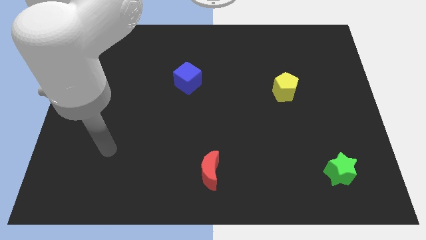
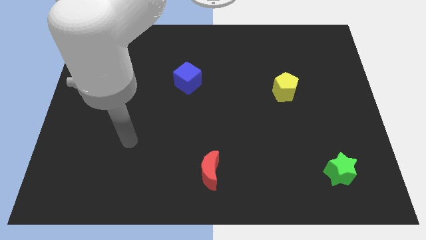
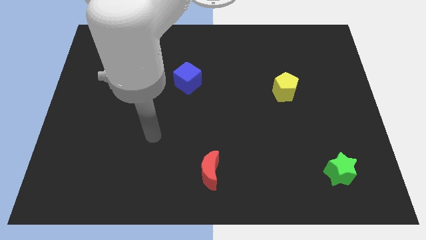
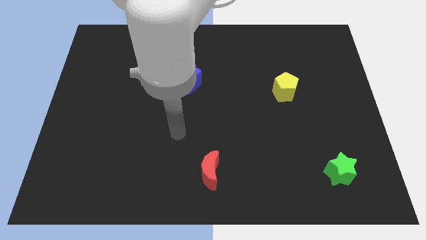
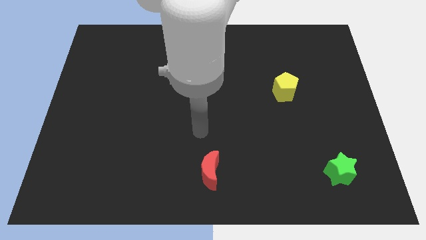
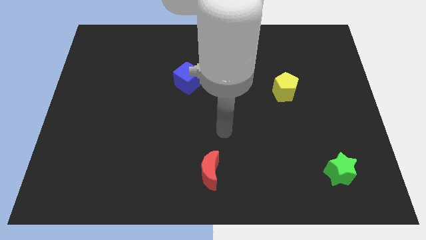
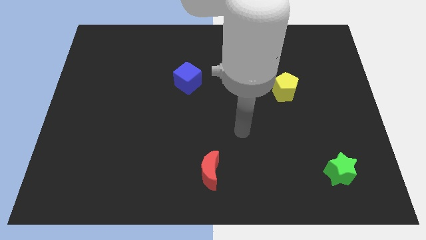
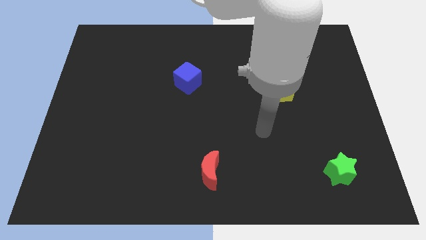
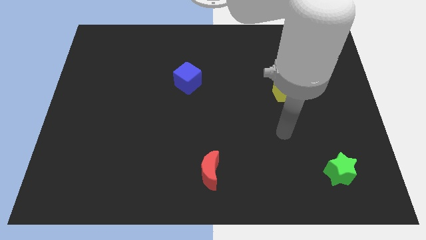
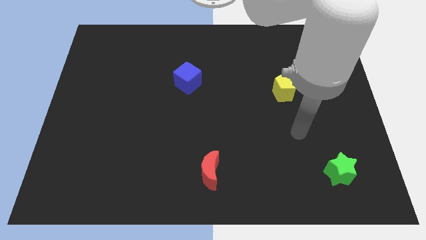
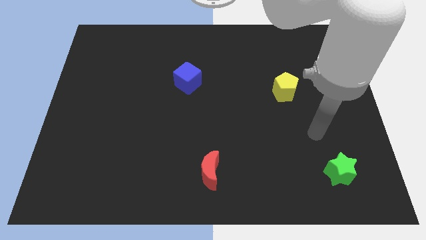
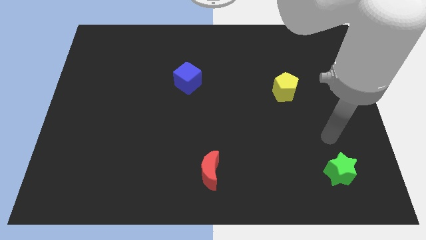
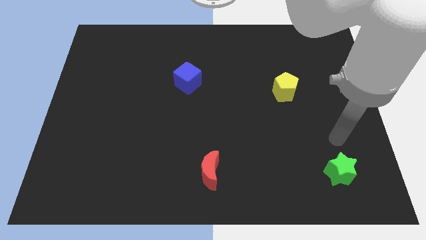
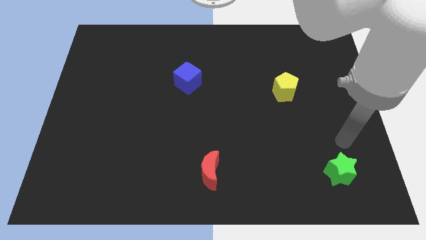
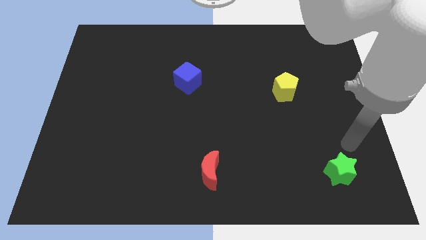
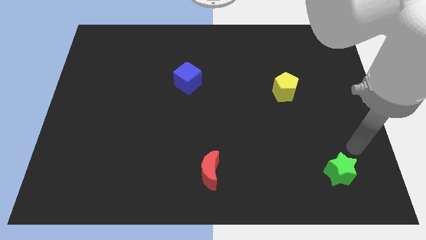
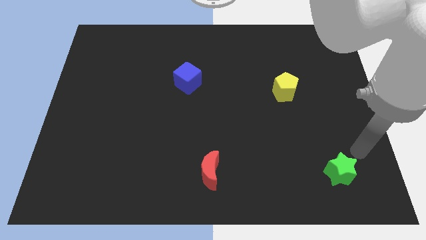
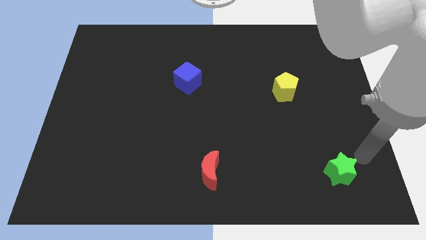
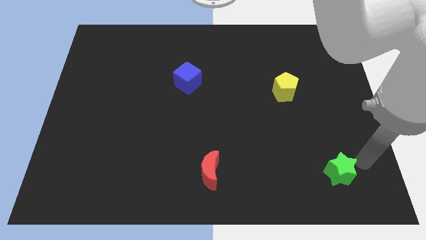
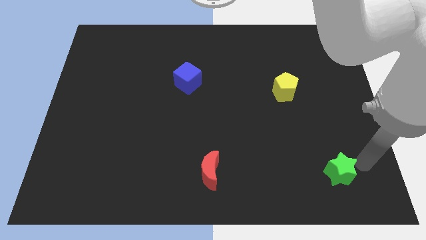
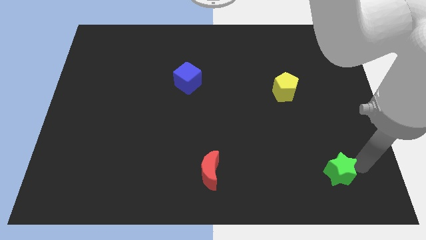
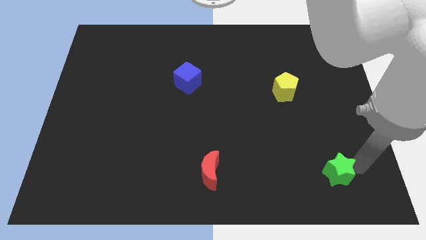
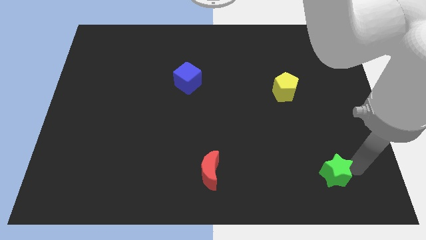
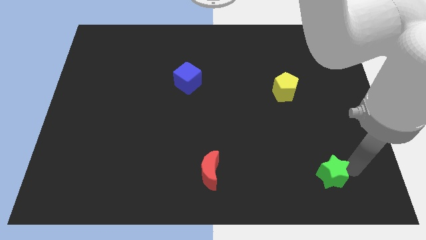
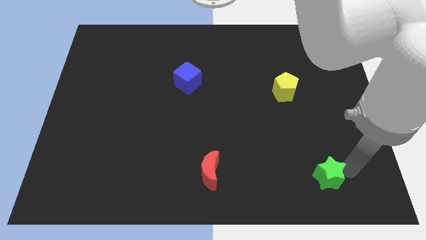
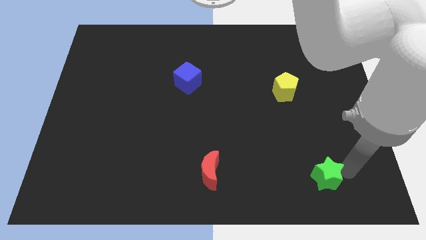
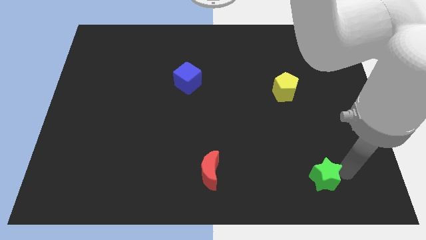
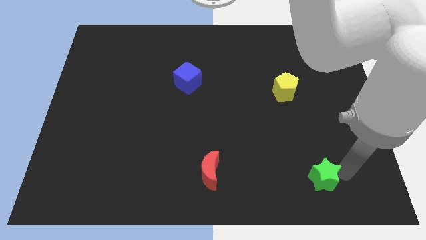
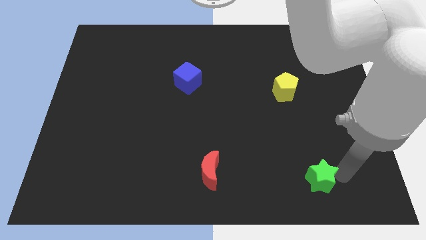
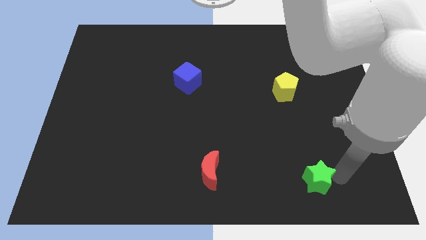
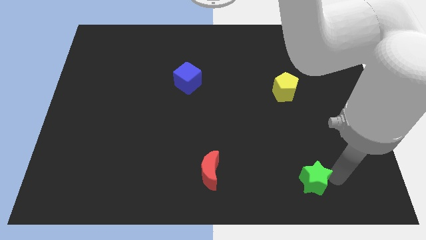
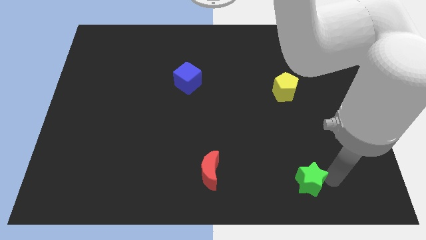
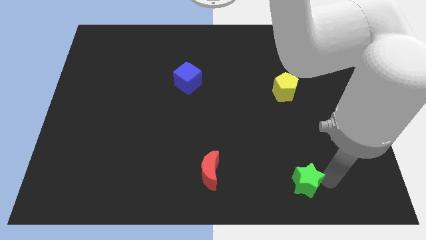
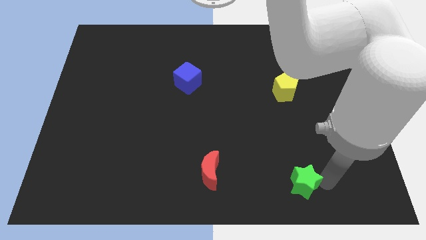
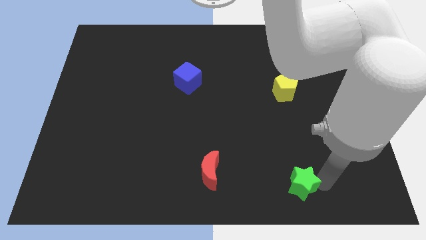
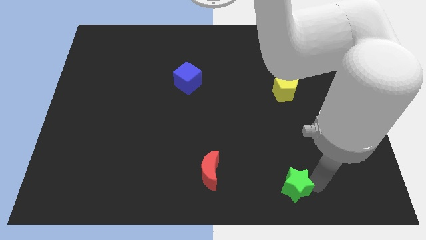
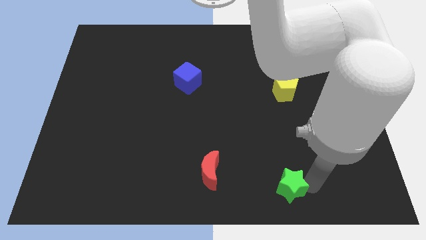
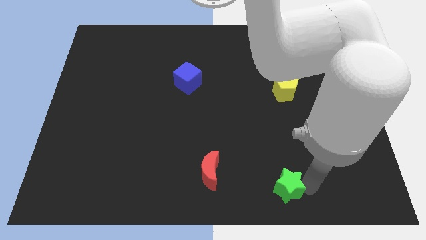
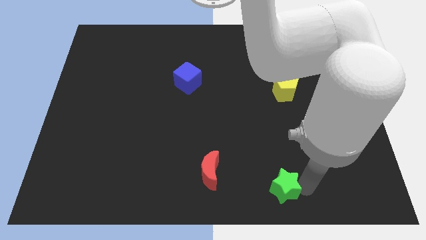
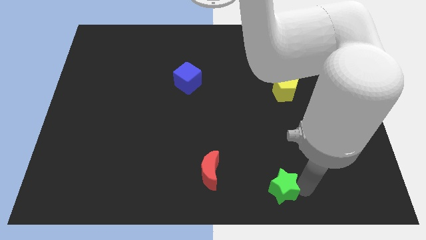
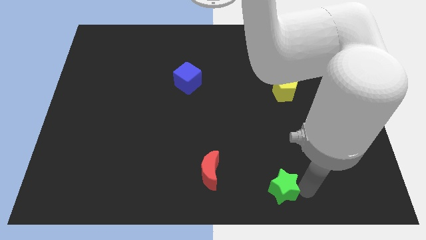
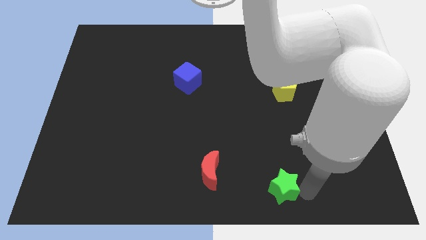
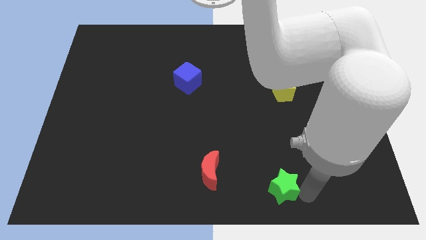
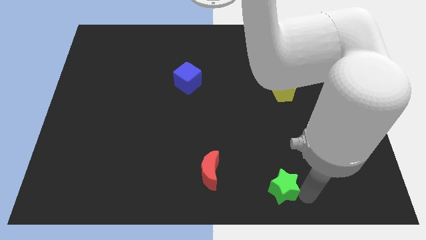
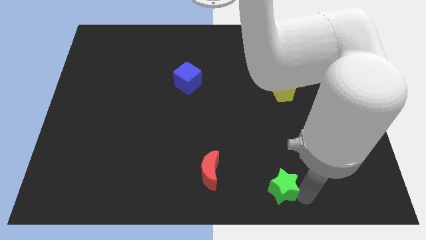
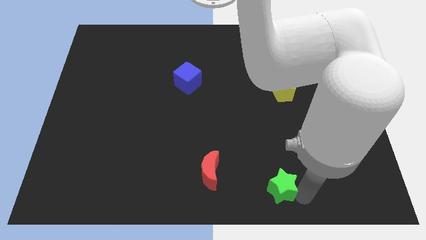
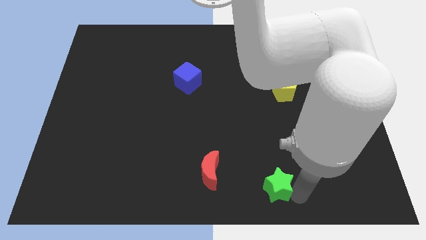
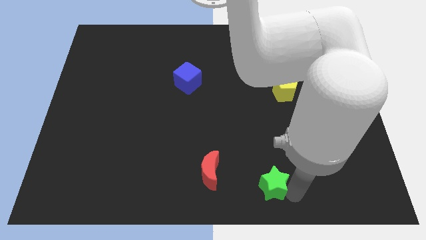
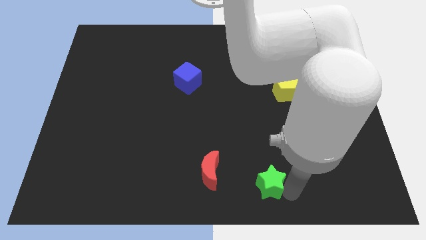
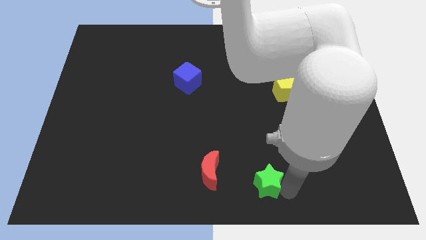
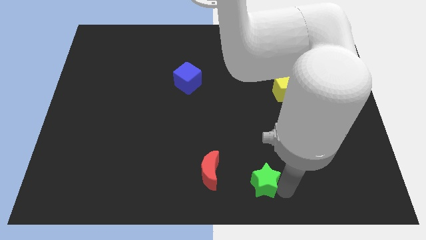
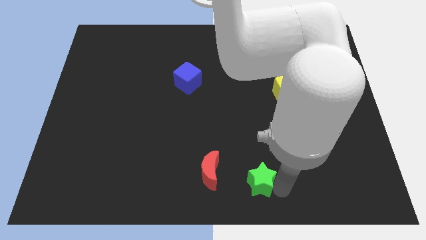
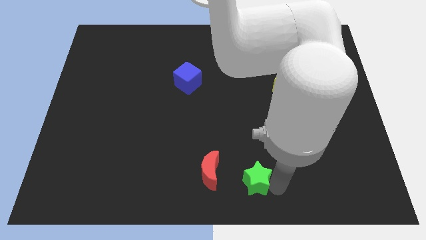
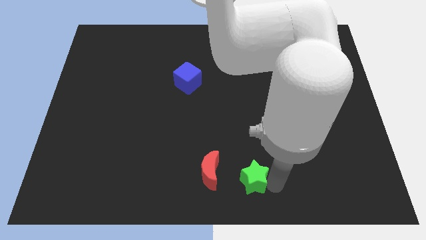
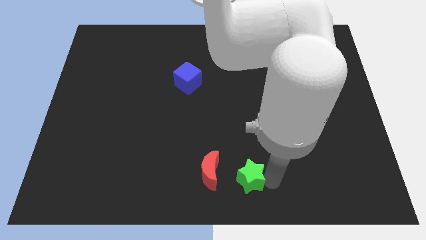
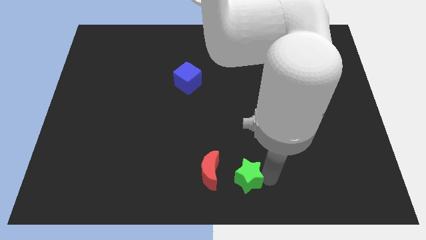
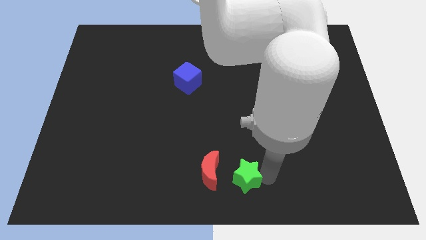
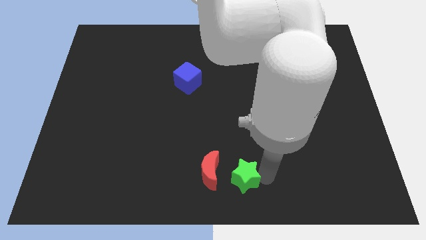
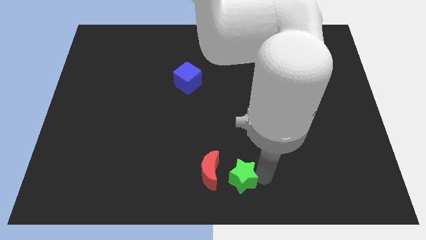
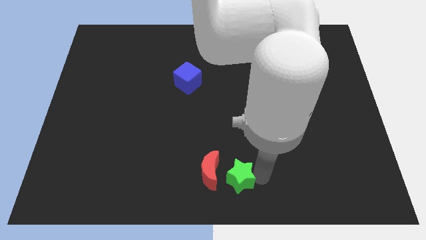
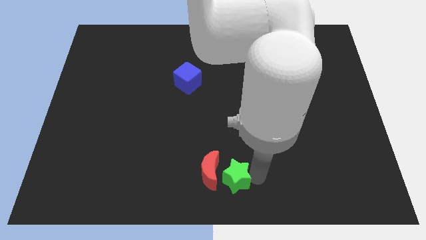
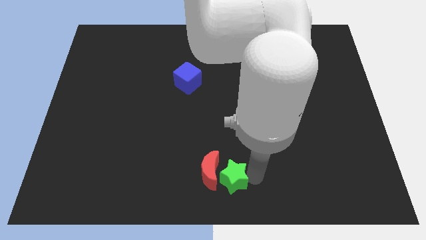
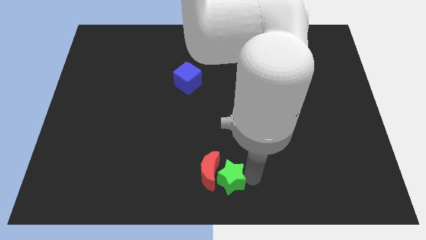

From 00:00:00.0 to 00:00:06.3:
put the green star next to the red block

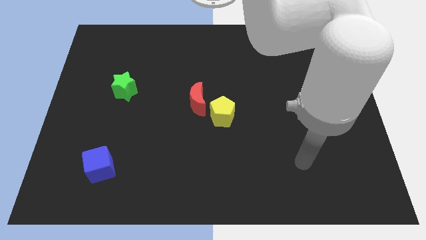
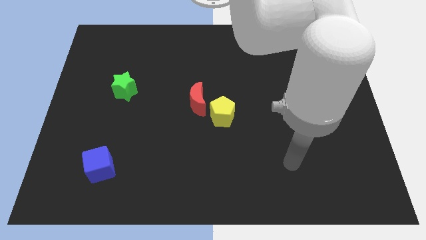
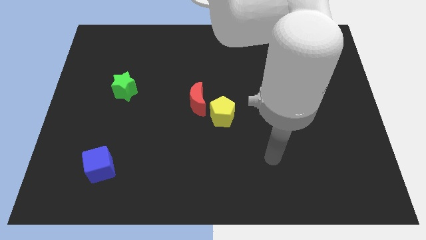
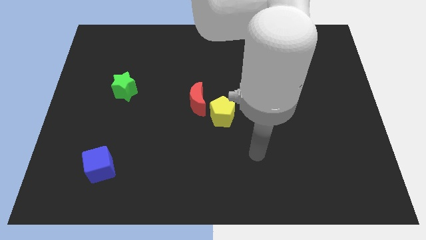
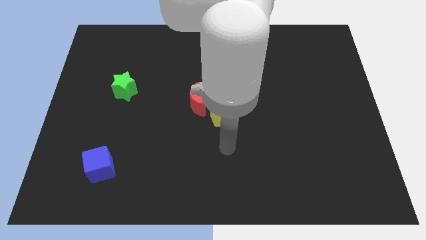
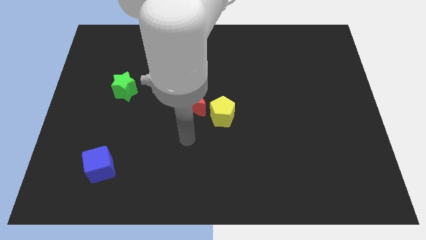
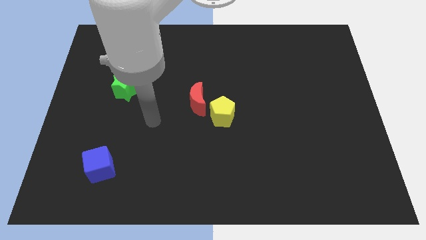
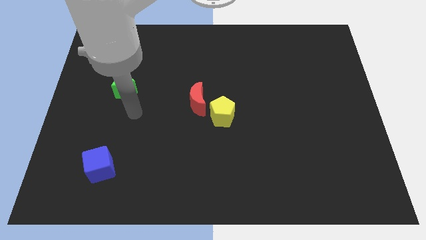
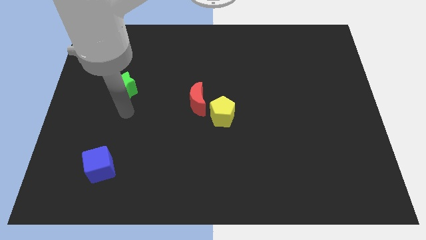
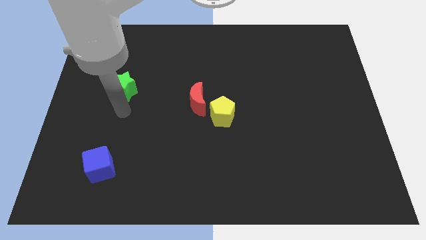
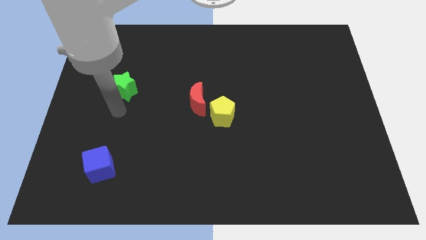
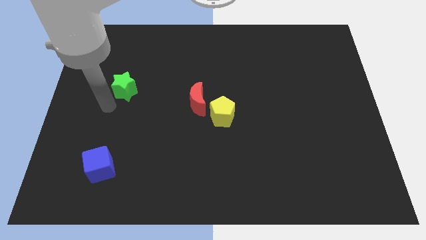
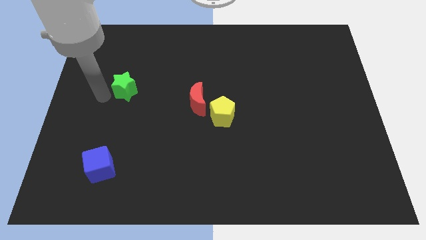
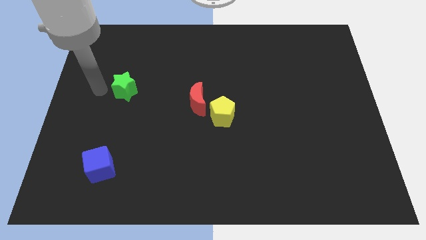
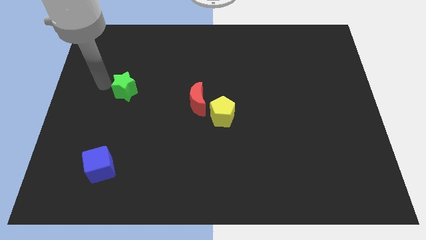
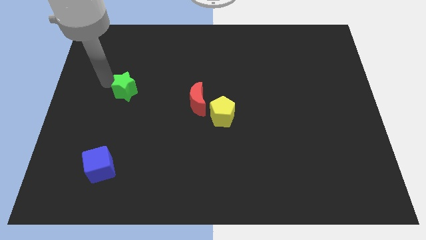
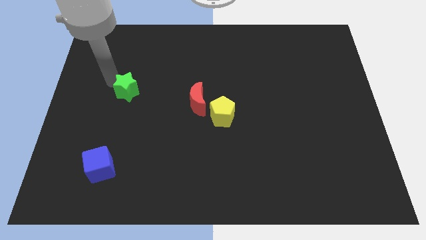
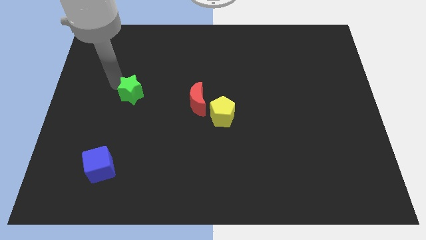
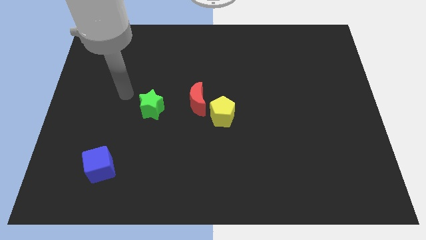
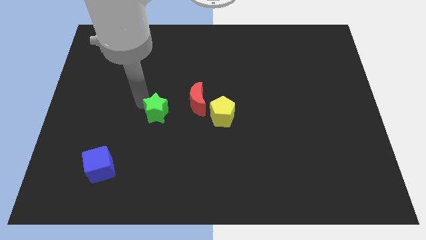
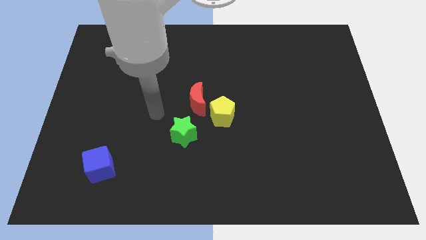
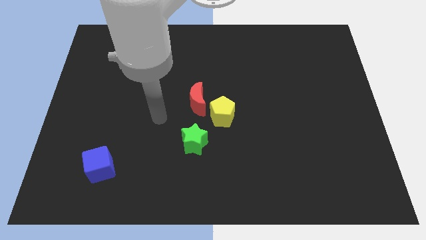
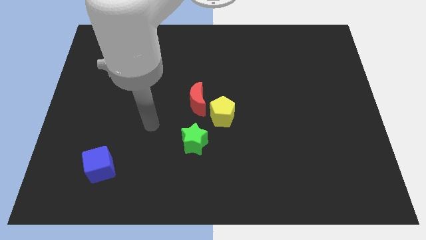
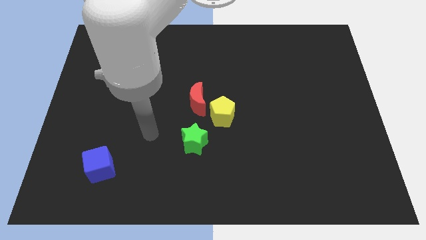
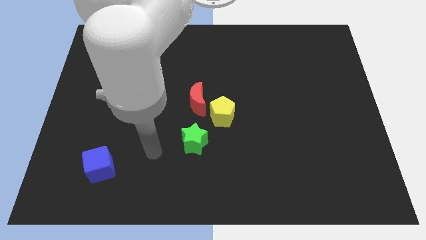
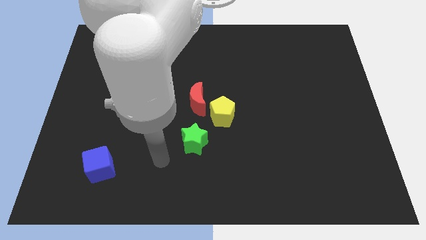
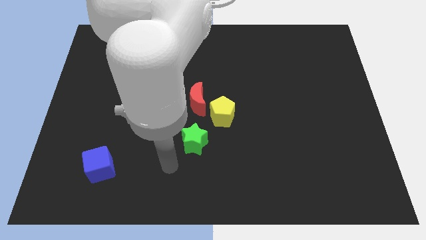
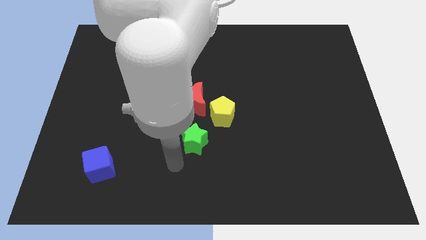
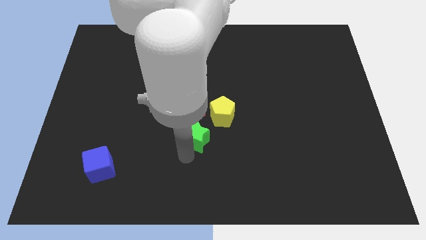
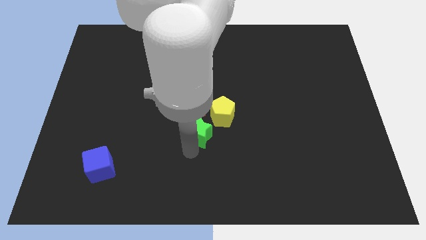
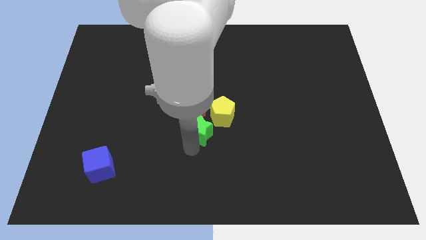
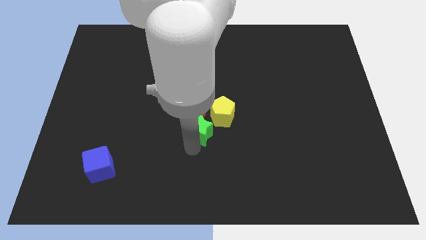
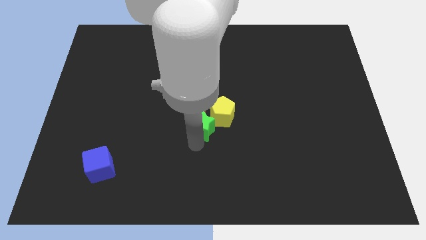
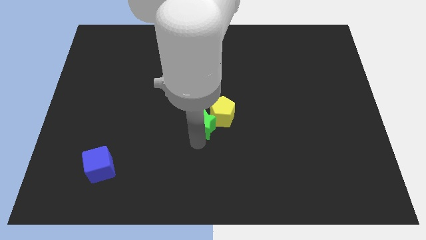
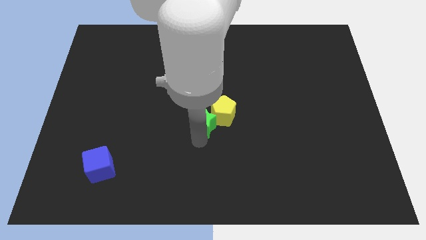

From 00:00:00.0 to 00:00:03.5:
slide the green star next to the pentagon
